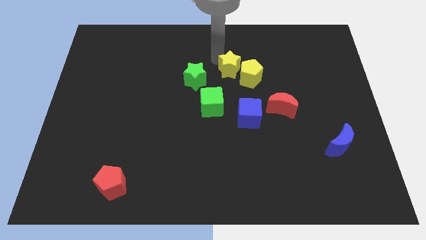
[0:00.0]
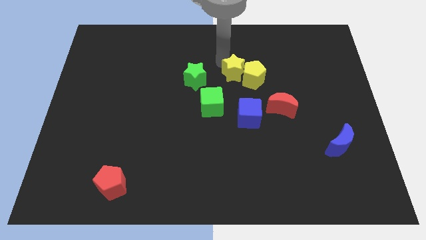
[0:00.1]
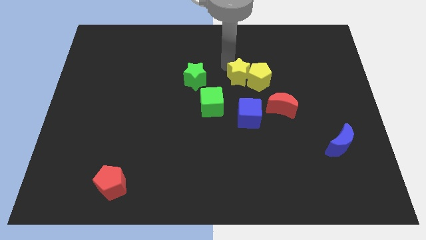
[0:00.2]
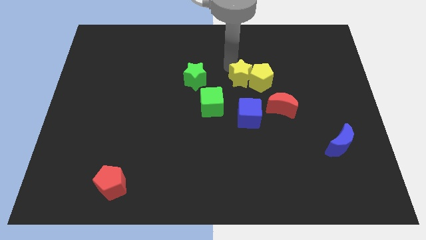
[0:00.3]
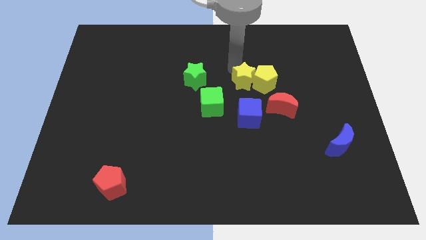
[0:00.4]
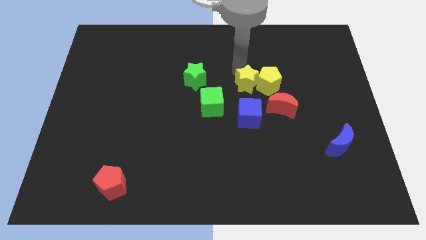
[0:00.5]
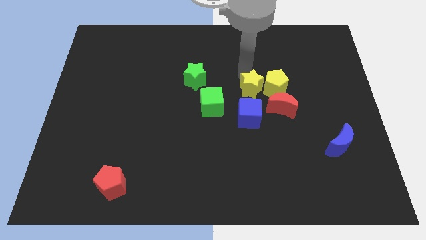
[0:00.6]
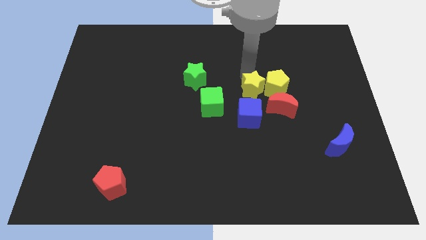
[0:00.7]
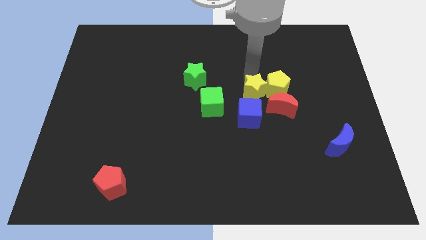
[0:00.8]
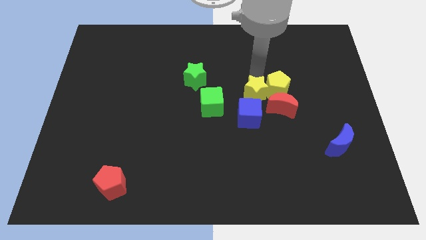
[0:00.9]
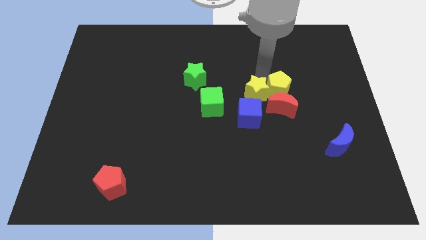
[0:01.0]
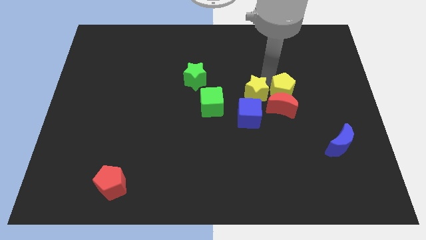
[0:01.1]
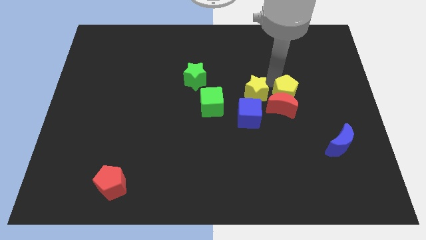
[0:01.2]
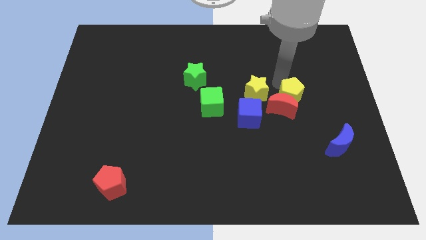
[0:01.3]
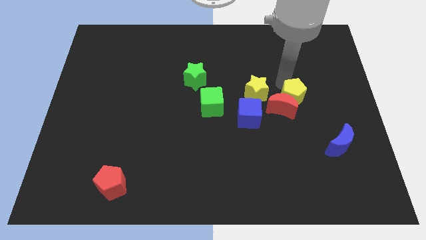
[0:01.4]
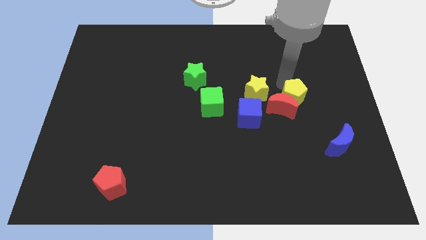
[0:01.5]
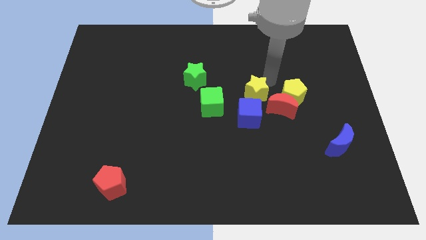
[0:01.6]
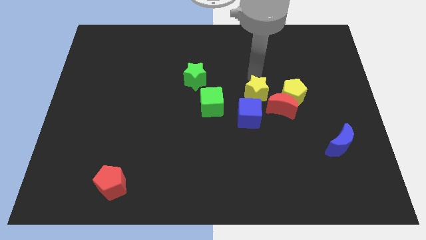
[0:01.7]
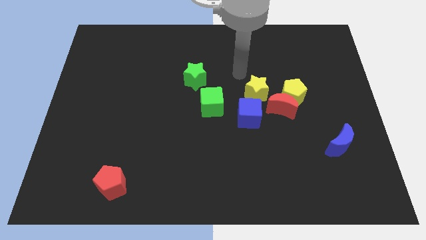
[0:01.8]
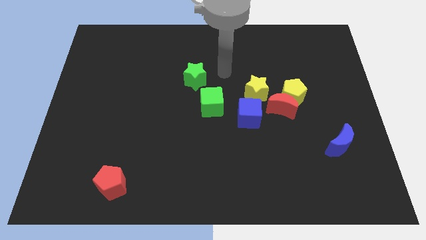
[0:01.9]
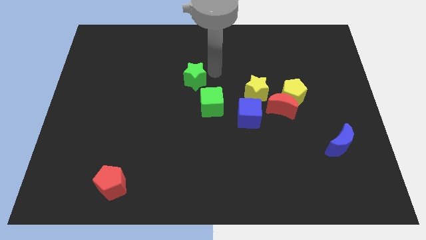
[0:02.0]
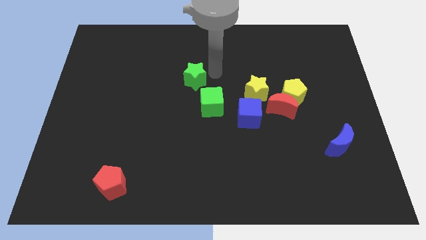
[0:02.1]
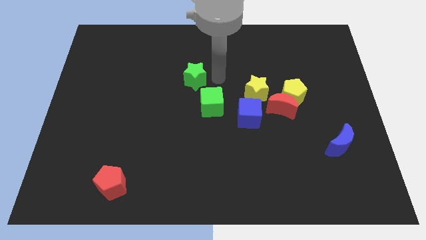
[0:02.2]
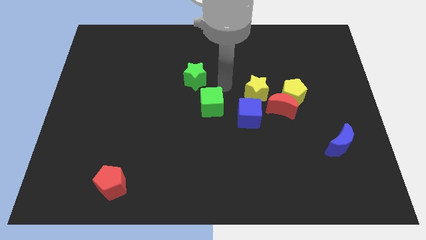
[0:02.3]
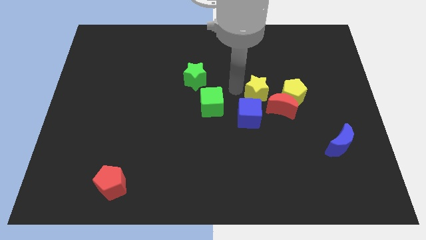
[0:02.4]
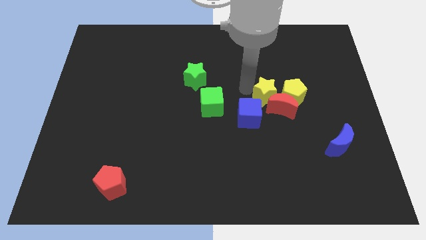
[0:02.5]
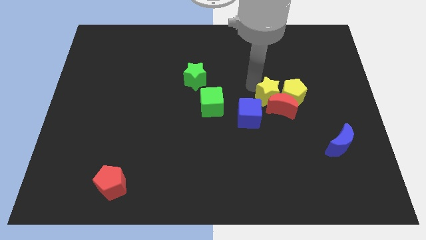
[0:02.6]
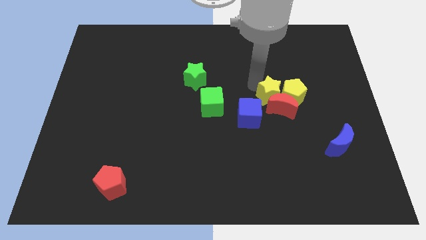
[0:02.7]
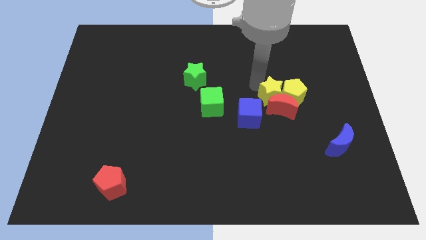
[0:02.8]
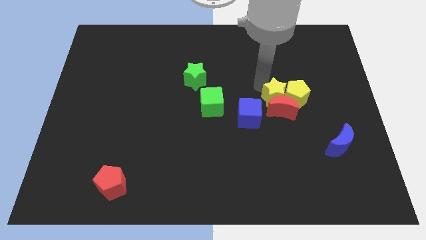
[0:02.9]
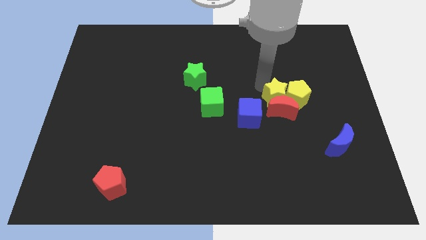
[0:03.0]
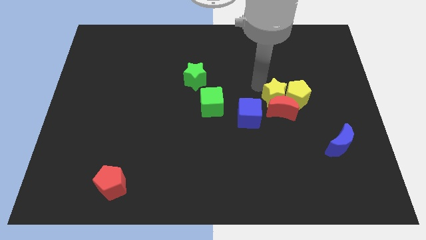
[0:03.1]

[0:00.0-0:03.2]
place yellow star and yellow pentagon above the red crescent

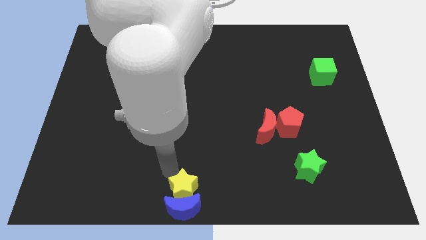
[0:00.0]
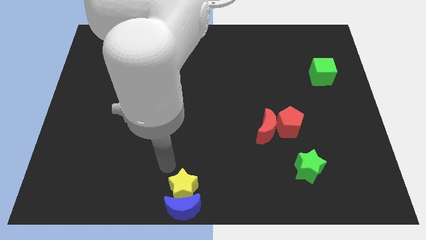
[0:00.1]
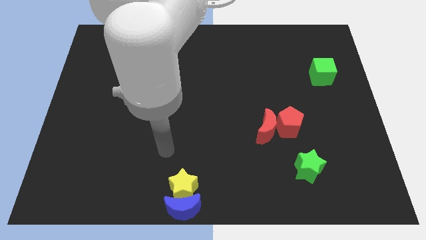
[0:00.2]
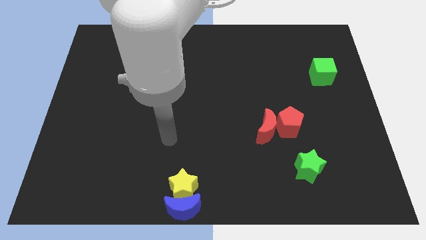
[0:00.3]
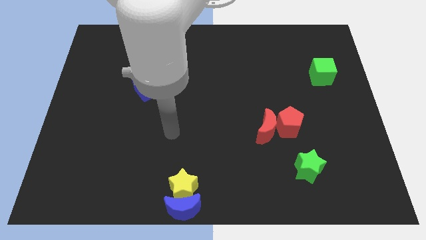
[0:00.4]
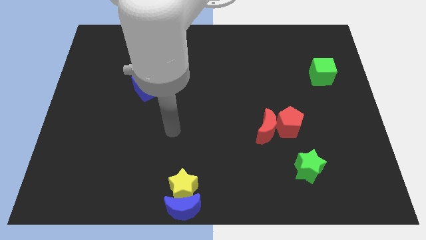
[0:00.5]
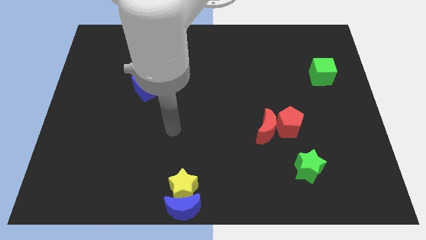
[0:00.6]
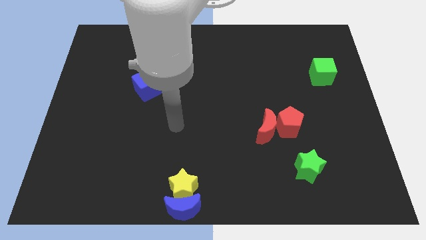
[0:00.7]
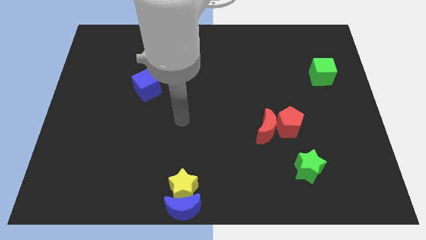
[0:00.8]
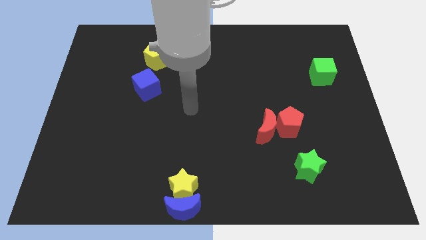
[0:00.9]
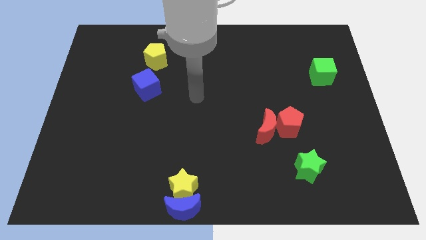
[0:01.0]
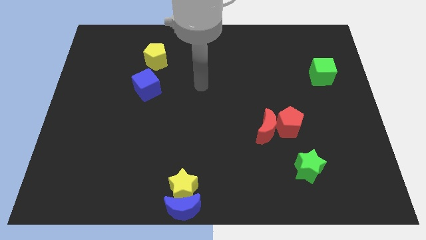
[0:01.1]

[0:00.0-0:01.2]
move the arm away from the yellow star

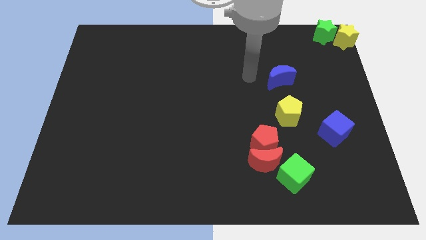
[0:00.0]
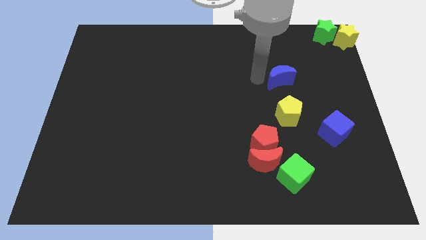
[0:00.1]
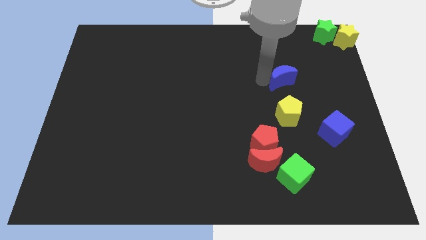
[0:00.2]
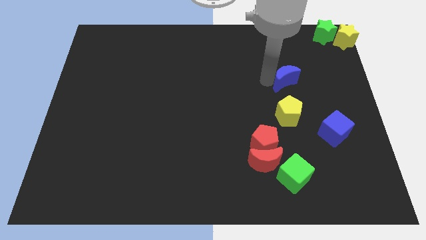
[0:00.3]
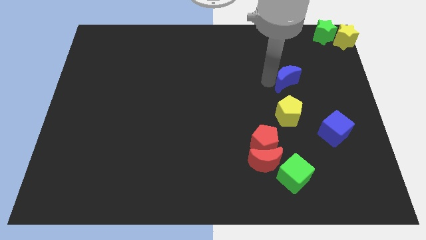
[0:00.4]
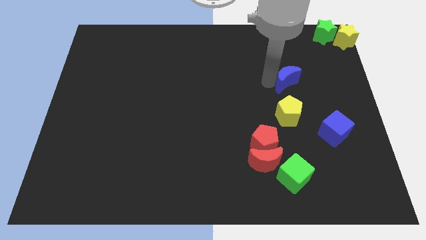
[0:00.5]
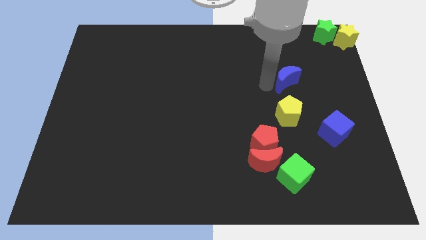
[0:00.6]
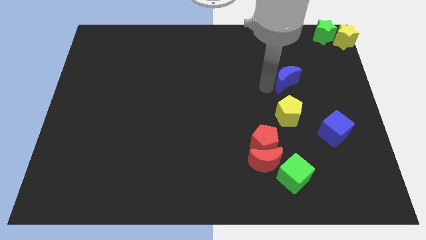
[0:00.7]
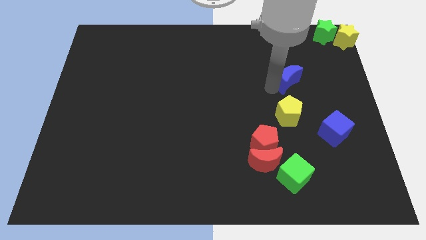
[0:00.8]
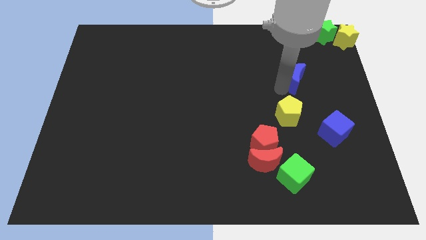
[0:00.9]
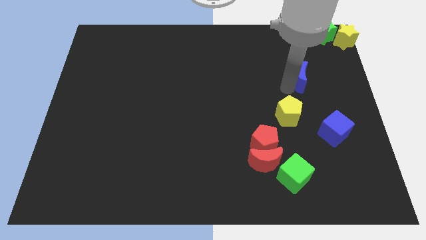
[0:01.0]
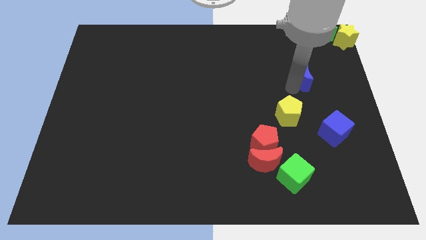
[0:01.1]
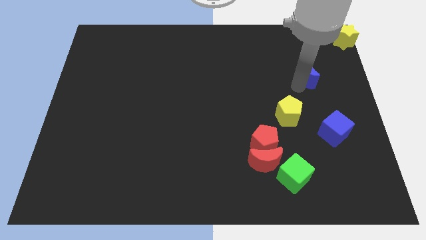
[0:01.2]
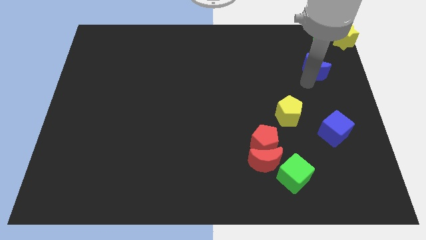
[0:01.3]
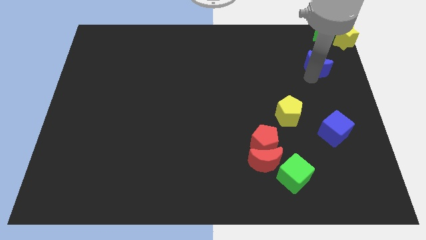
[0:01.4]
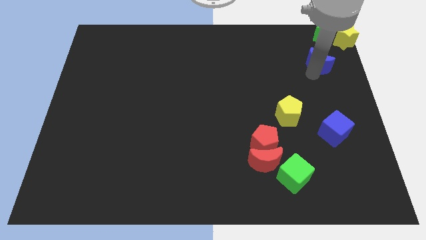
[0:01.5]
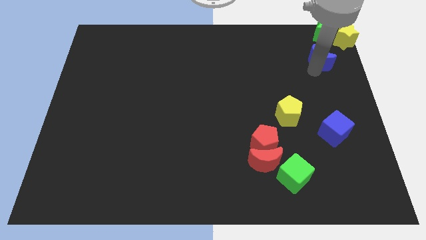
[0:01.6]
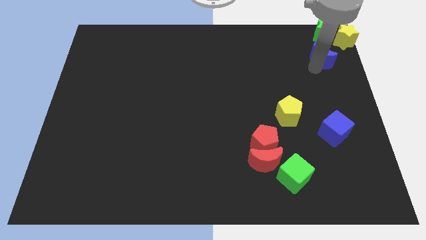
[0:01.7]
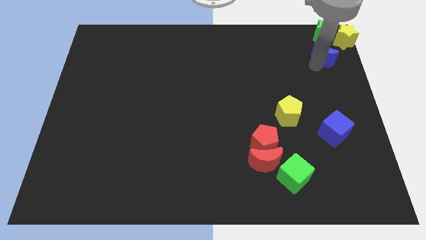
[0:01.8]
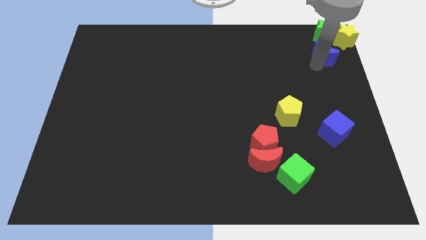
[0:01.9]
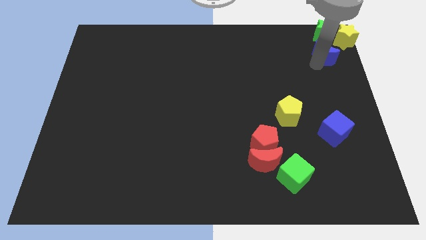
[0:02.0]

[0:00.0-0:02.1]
push blue moon towards top right

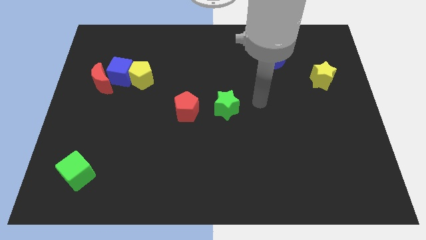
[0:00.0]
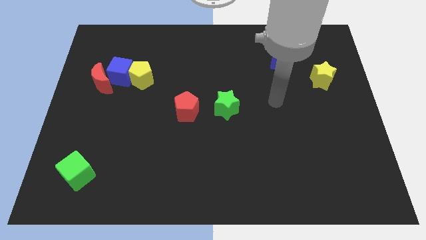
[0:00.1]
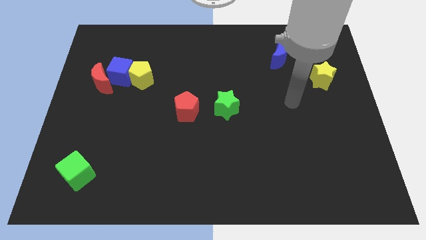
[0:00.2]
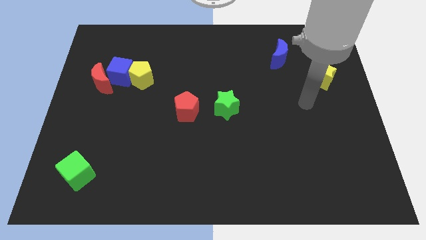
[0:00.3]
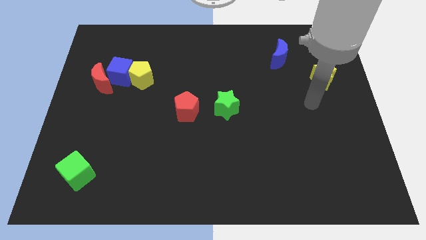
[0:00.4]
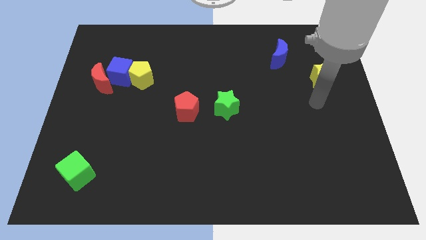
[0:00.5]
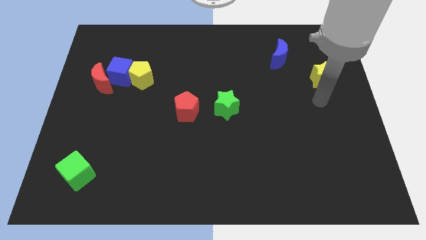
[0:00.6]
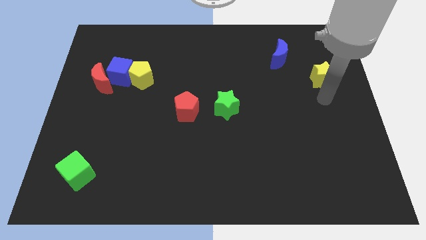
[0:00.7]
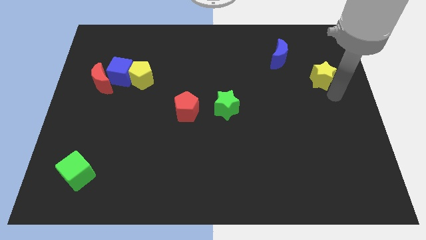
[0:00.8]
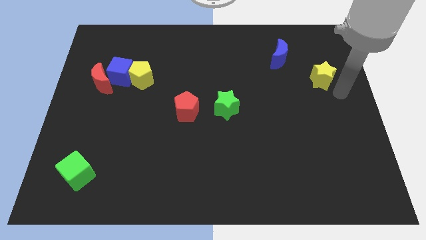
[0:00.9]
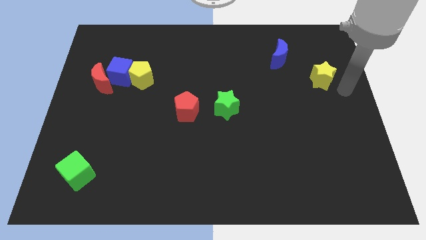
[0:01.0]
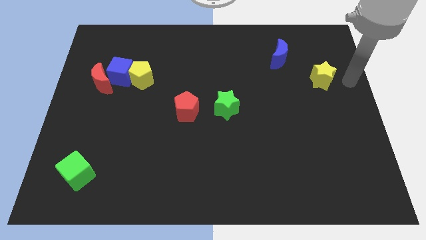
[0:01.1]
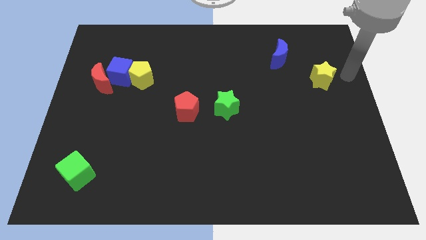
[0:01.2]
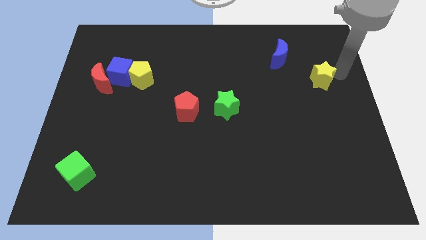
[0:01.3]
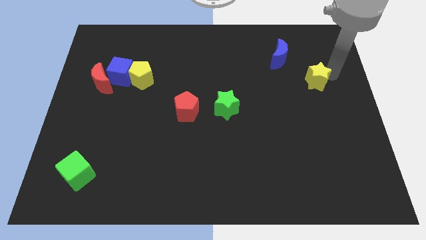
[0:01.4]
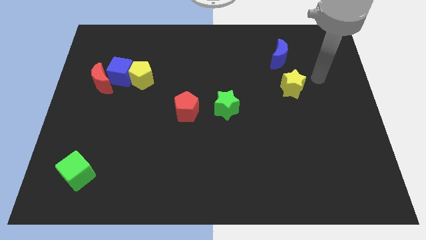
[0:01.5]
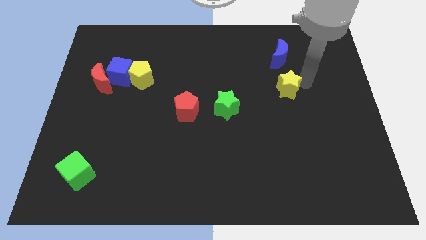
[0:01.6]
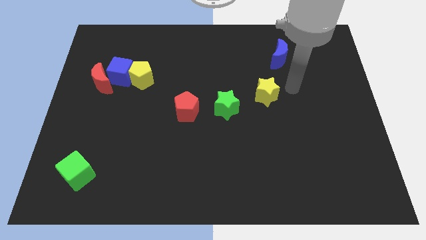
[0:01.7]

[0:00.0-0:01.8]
put the yellow star vertically below the blue moon

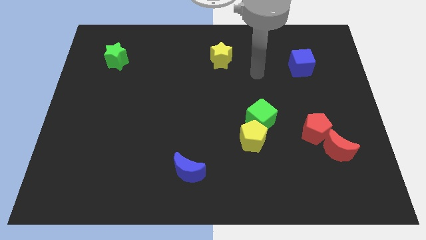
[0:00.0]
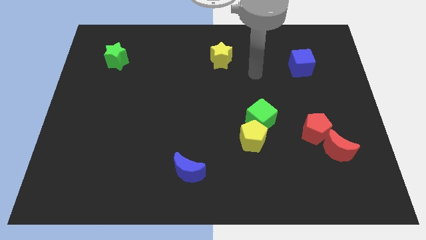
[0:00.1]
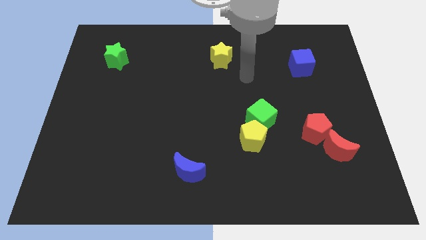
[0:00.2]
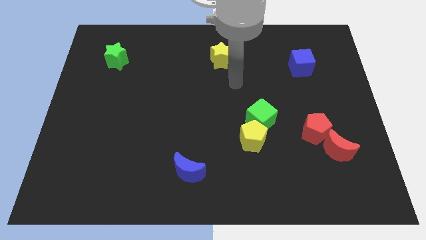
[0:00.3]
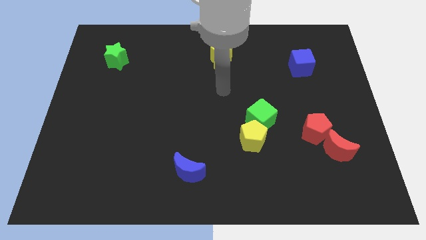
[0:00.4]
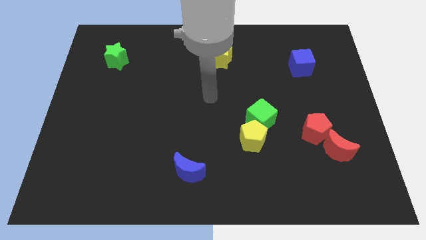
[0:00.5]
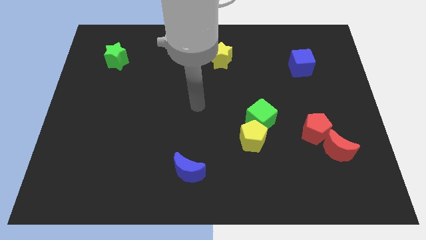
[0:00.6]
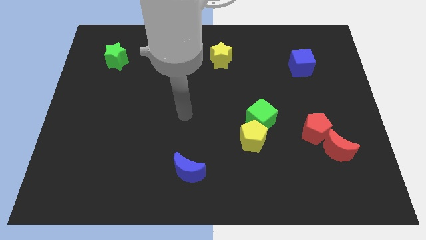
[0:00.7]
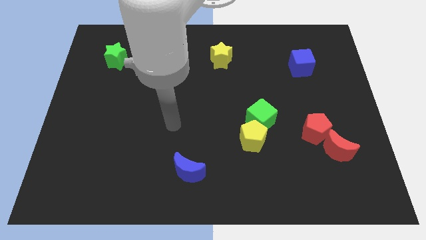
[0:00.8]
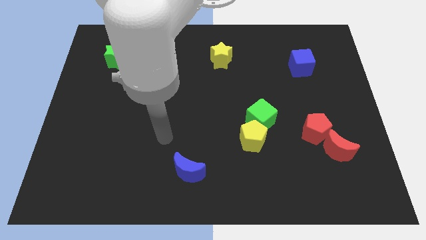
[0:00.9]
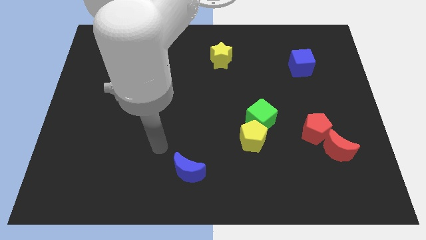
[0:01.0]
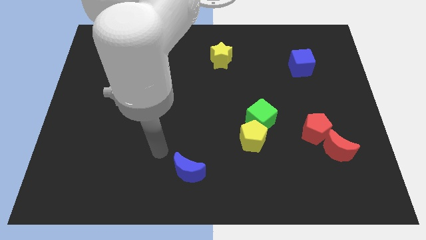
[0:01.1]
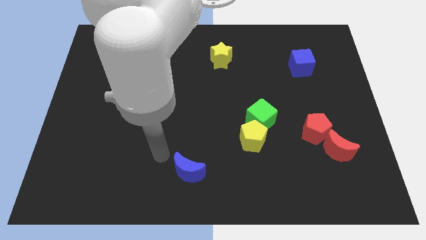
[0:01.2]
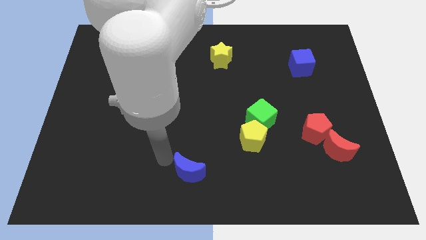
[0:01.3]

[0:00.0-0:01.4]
point your arm at the left of the blue crescent
